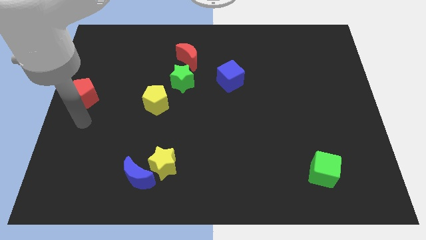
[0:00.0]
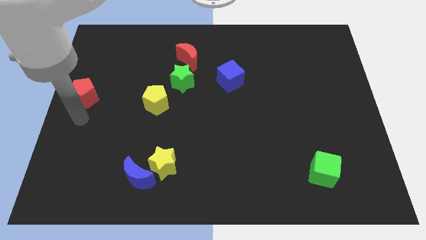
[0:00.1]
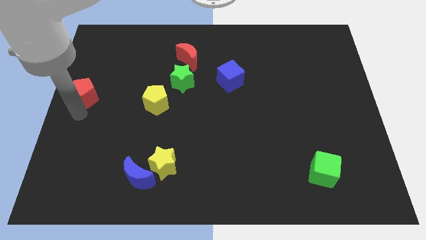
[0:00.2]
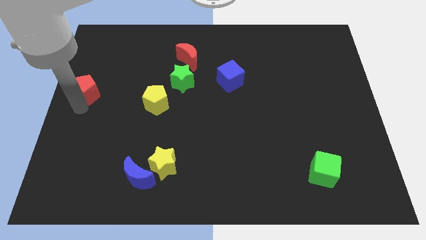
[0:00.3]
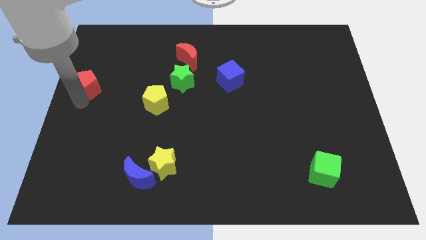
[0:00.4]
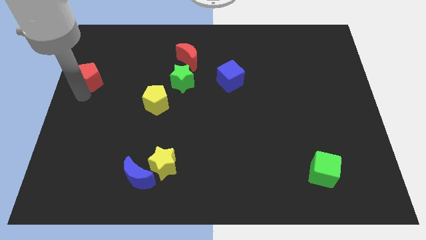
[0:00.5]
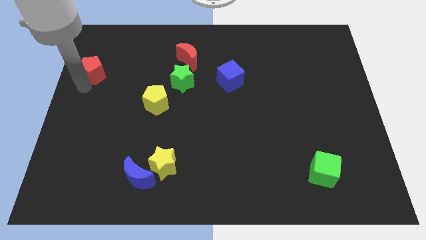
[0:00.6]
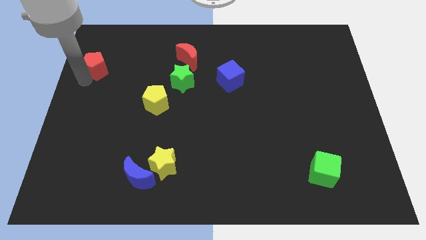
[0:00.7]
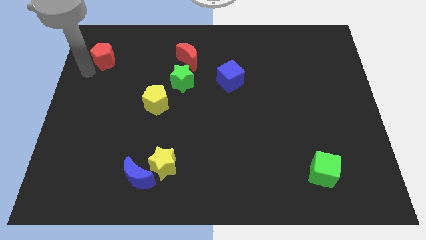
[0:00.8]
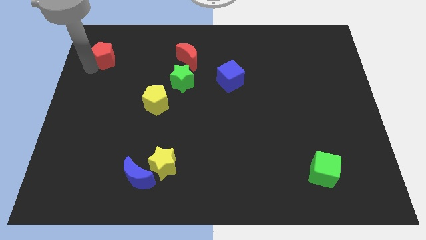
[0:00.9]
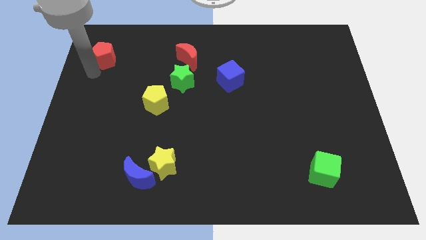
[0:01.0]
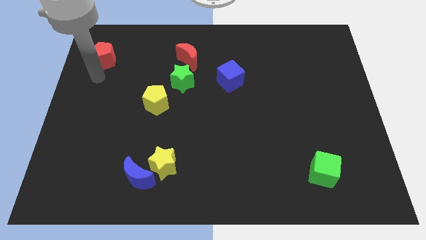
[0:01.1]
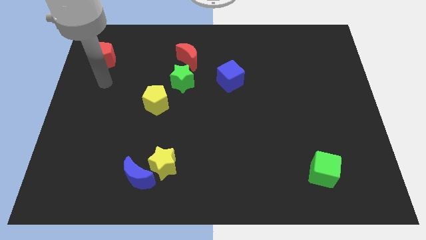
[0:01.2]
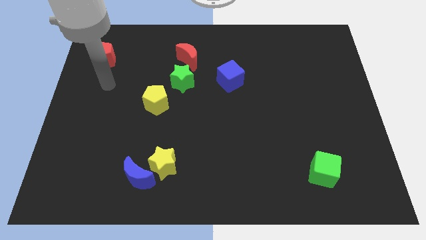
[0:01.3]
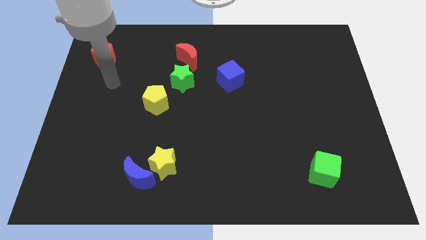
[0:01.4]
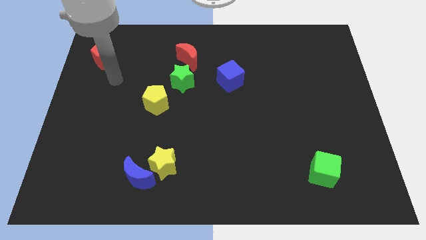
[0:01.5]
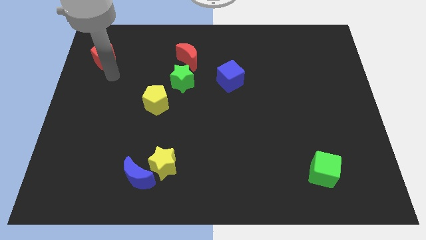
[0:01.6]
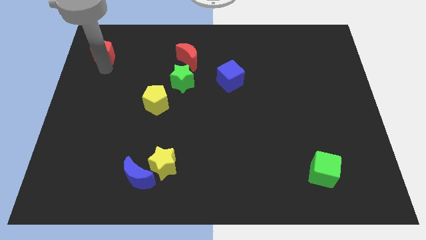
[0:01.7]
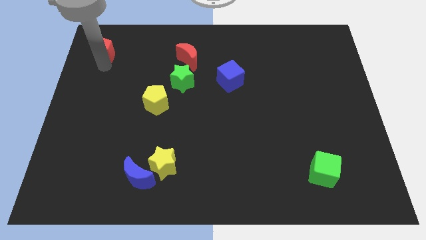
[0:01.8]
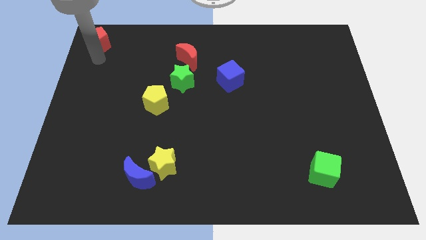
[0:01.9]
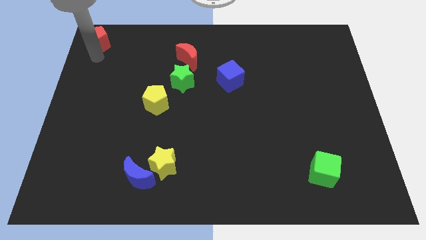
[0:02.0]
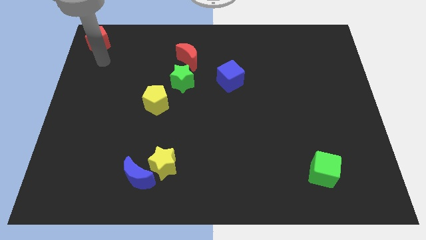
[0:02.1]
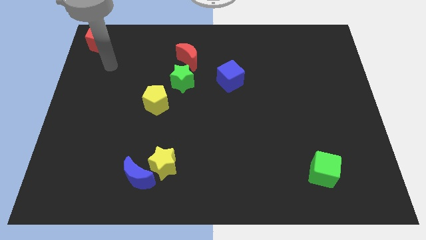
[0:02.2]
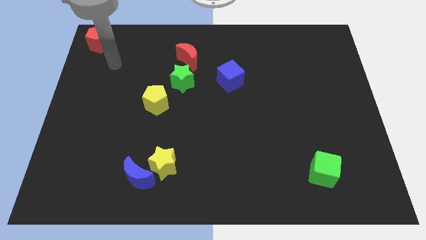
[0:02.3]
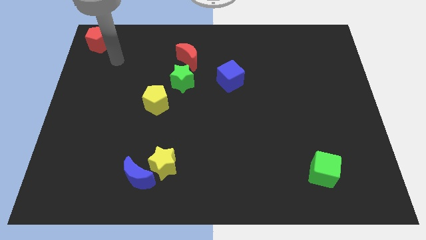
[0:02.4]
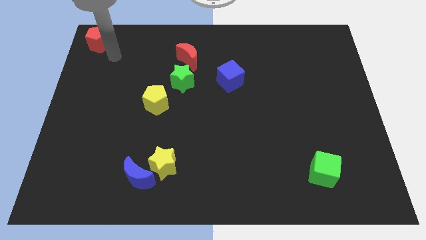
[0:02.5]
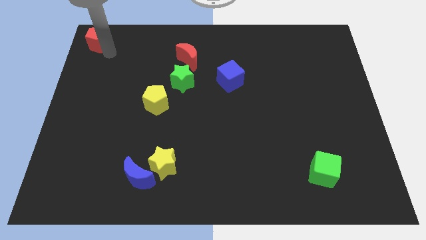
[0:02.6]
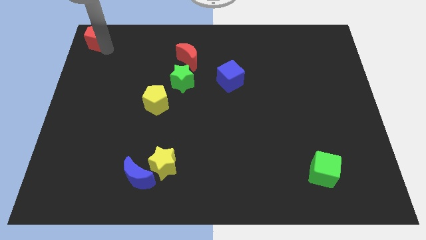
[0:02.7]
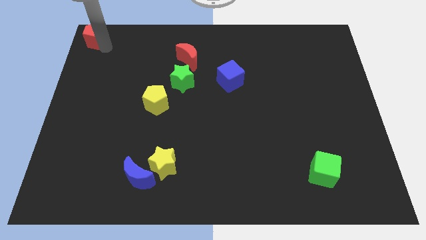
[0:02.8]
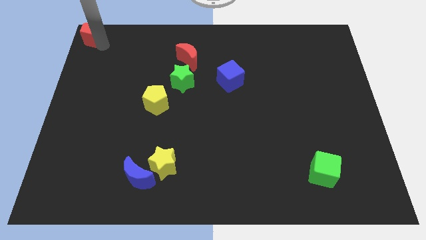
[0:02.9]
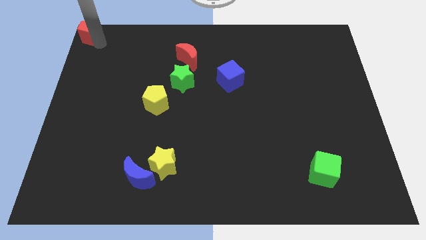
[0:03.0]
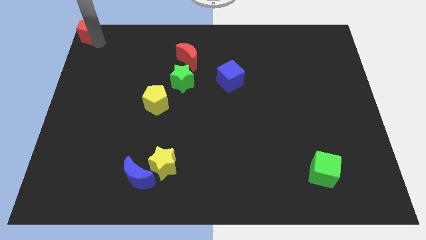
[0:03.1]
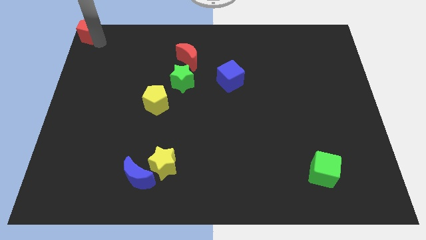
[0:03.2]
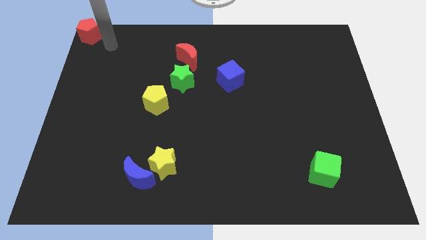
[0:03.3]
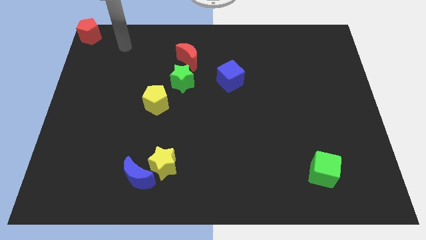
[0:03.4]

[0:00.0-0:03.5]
move the red pentagon to the top left corner of the board

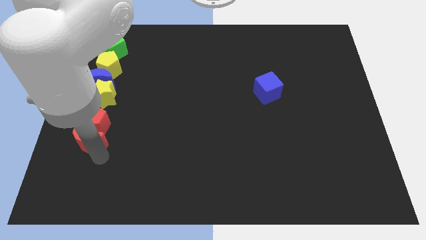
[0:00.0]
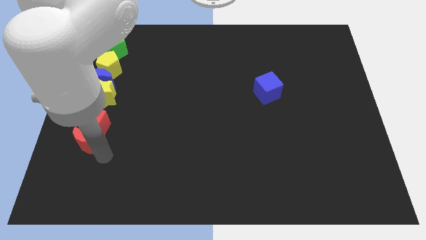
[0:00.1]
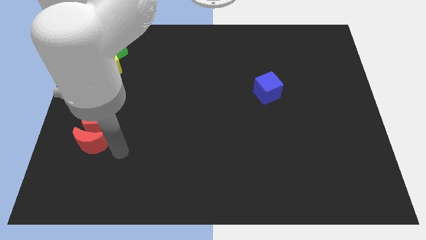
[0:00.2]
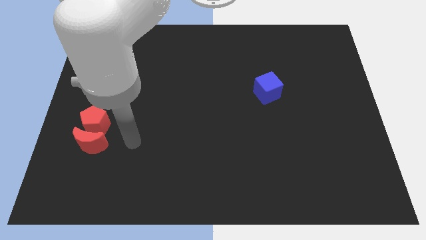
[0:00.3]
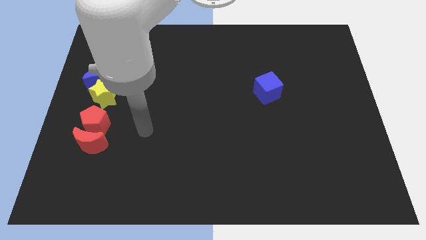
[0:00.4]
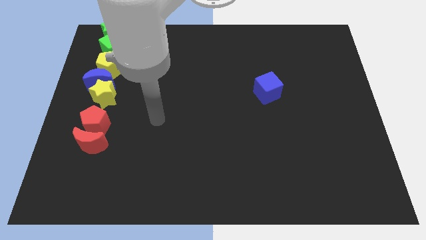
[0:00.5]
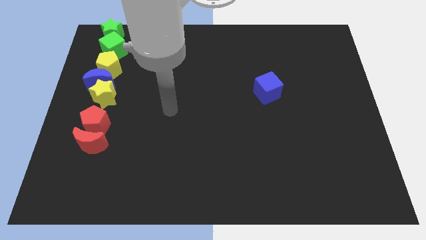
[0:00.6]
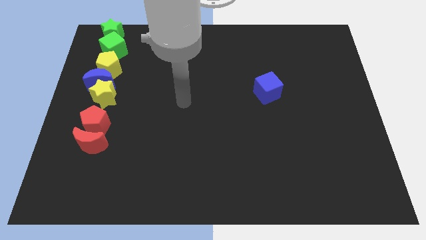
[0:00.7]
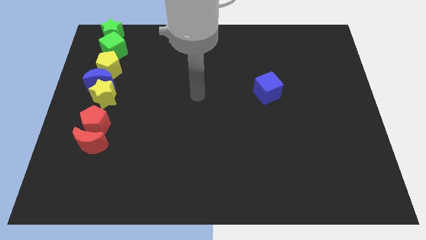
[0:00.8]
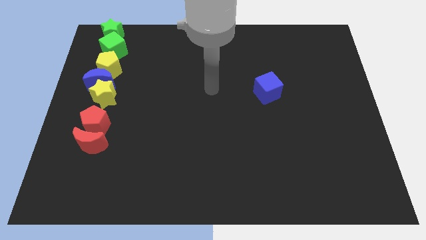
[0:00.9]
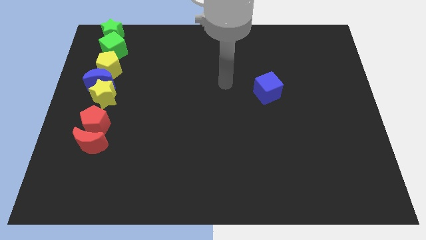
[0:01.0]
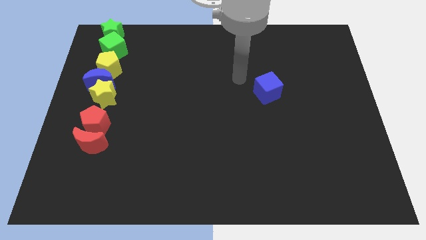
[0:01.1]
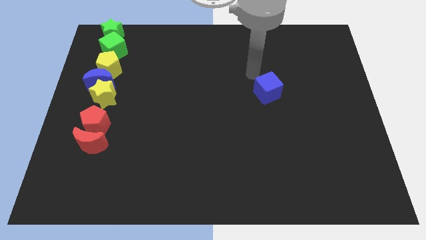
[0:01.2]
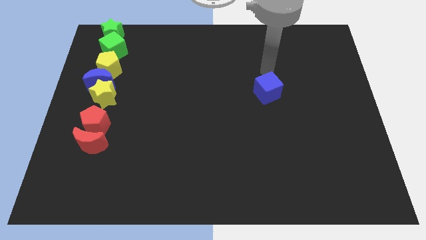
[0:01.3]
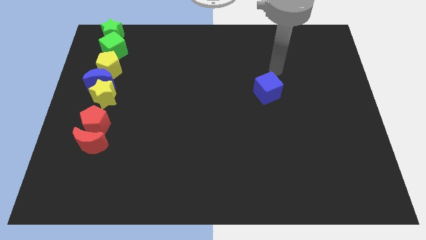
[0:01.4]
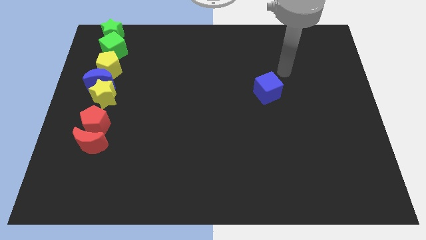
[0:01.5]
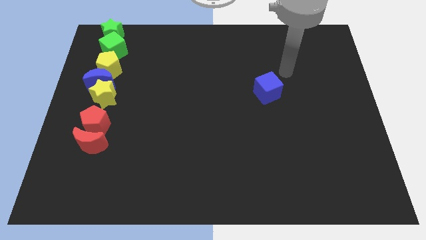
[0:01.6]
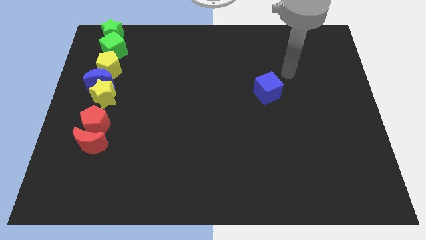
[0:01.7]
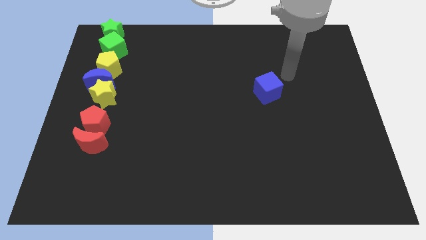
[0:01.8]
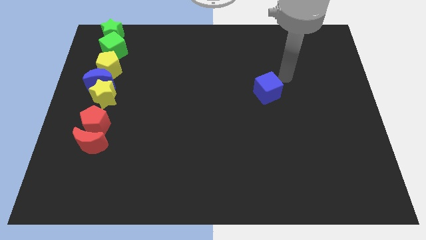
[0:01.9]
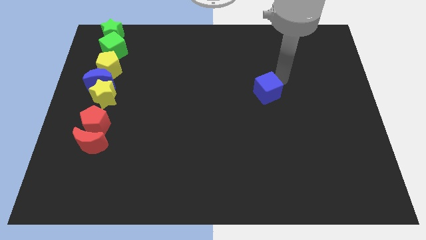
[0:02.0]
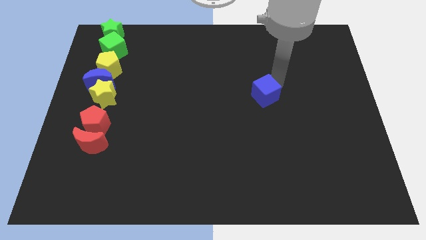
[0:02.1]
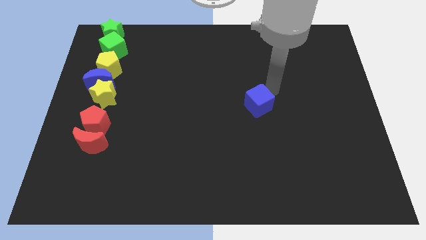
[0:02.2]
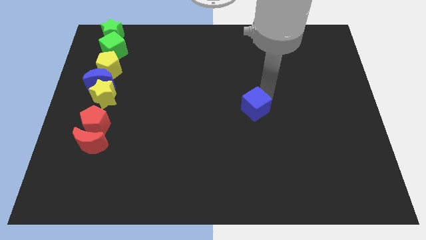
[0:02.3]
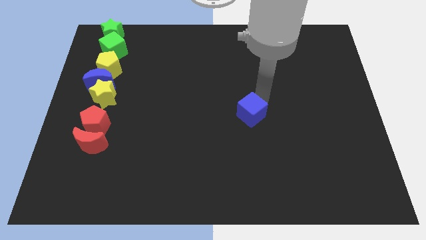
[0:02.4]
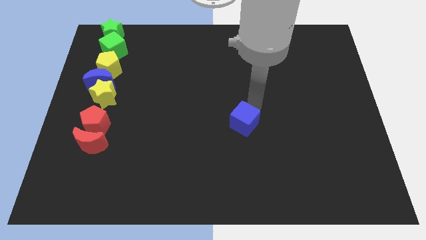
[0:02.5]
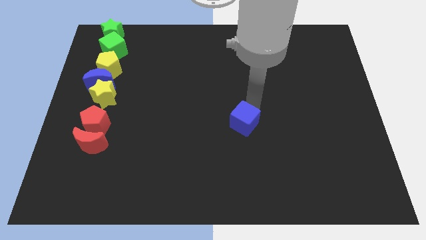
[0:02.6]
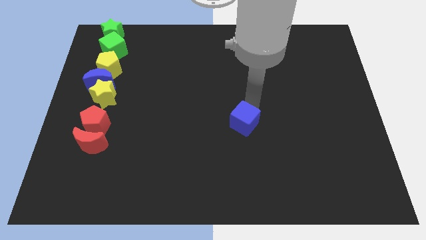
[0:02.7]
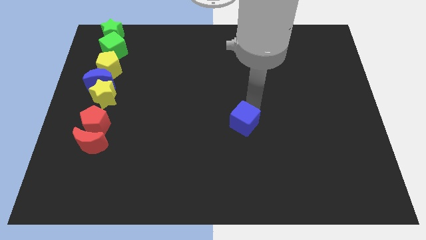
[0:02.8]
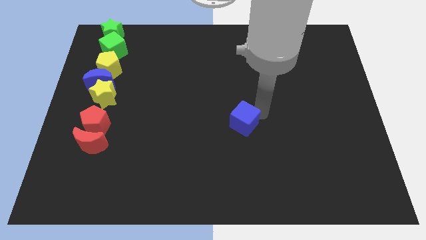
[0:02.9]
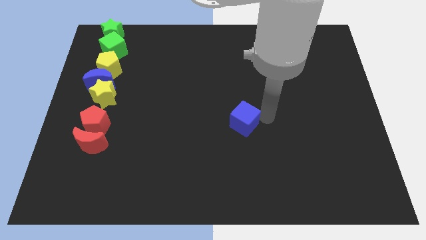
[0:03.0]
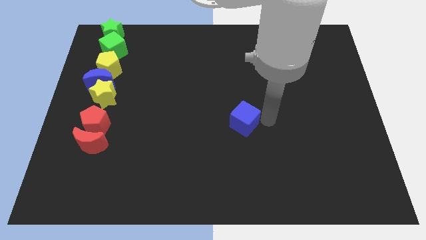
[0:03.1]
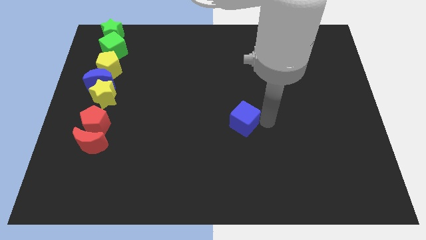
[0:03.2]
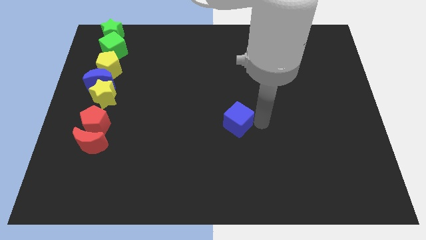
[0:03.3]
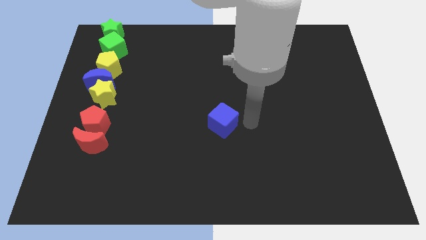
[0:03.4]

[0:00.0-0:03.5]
drag the blue cube to the left side of the table

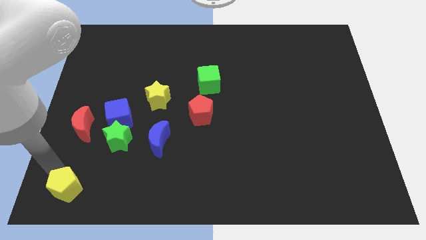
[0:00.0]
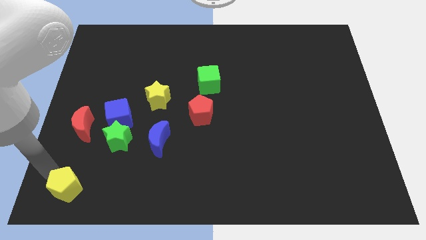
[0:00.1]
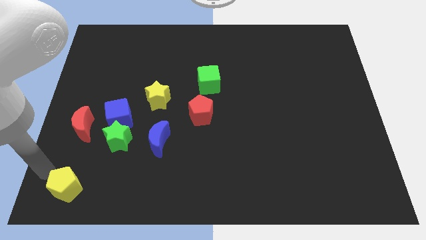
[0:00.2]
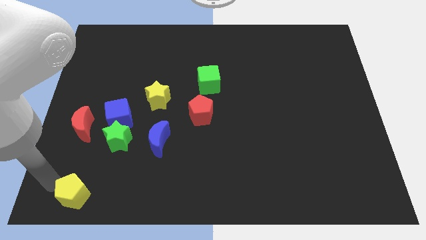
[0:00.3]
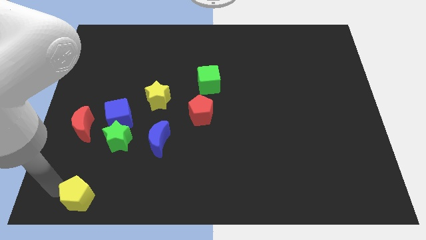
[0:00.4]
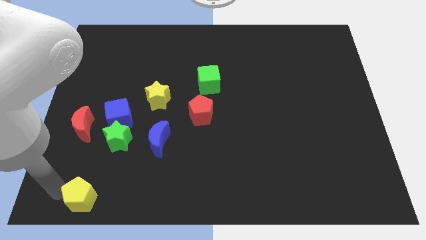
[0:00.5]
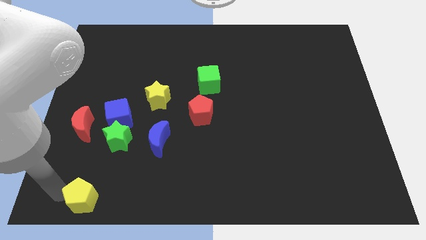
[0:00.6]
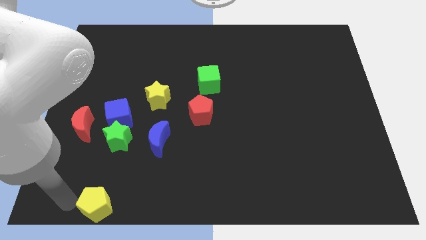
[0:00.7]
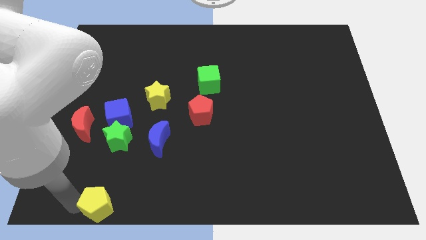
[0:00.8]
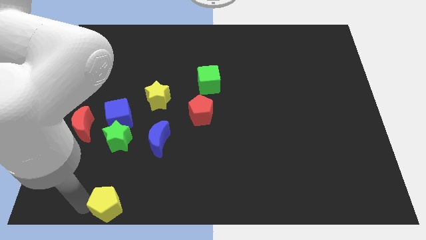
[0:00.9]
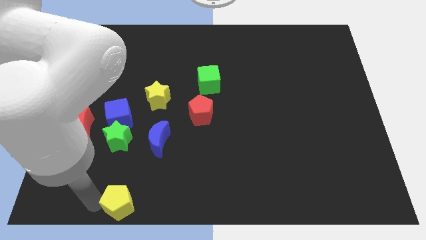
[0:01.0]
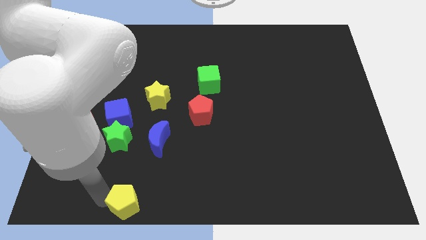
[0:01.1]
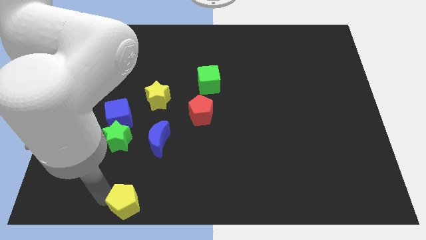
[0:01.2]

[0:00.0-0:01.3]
move the yellow pentagon to the bottom of the board

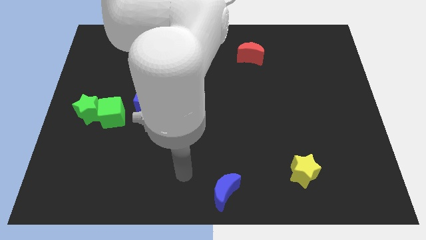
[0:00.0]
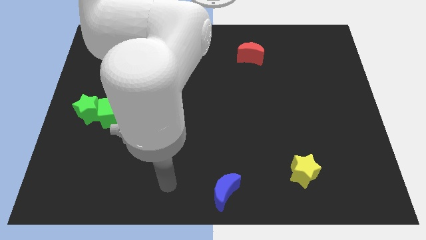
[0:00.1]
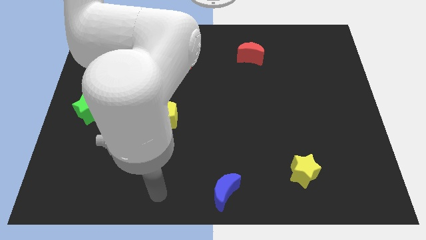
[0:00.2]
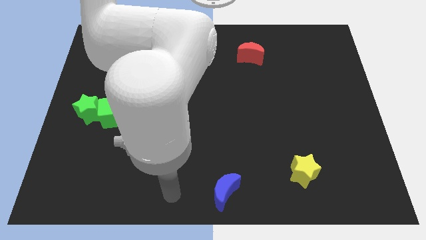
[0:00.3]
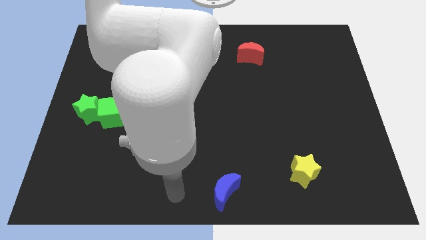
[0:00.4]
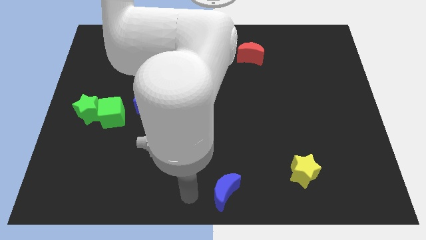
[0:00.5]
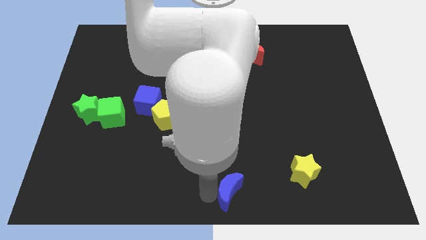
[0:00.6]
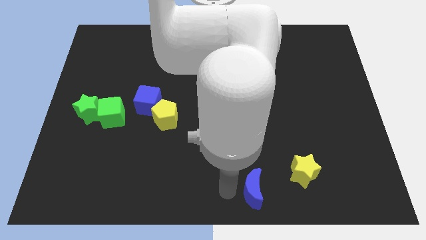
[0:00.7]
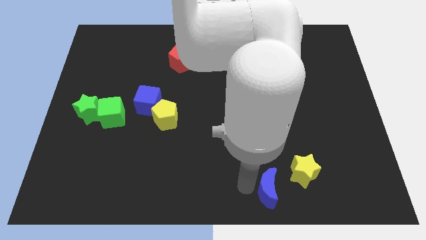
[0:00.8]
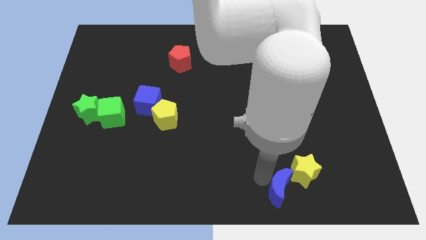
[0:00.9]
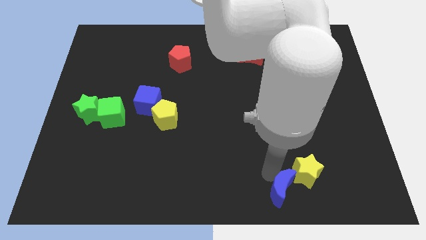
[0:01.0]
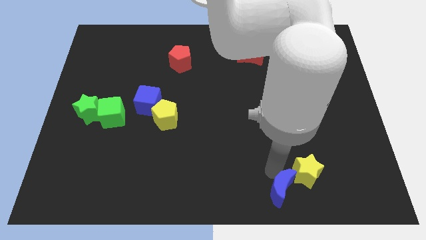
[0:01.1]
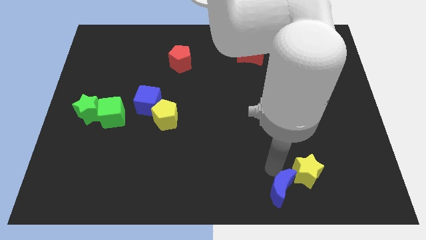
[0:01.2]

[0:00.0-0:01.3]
push the blue crescent into the yellow star
